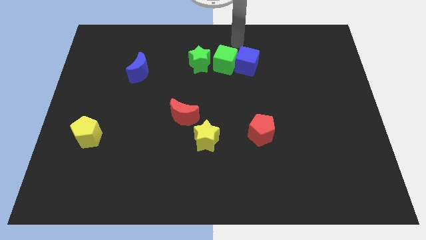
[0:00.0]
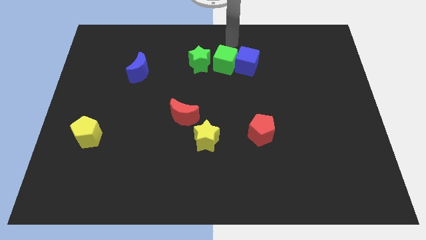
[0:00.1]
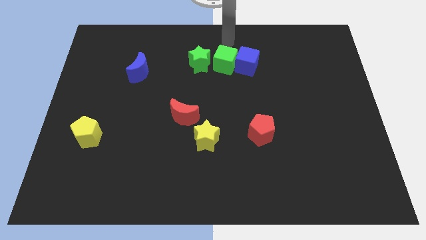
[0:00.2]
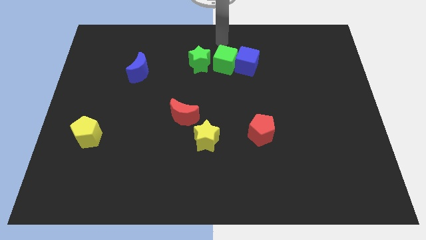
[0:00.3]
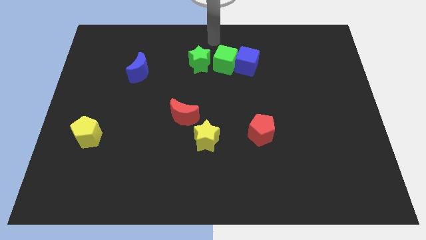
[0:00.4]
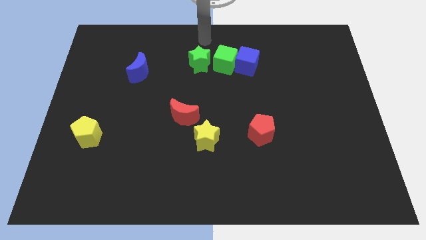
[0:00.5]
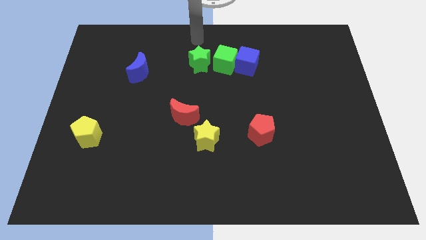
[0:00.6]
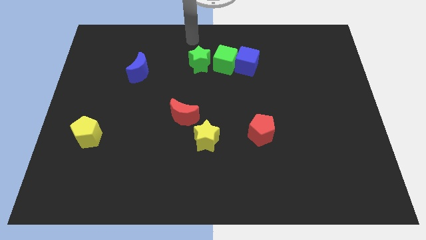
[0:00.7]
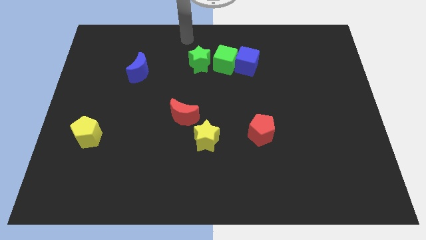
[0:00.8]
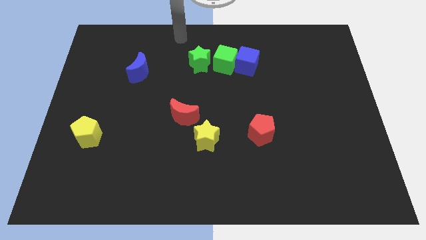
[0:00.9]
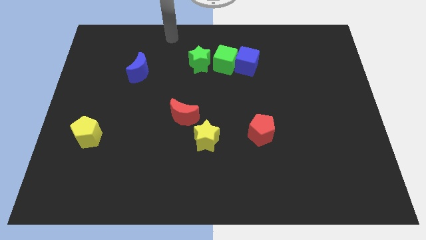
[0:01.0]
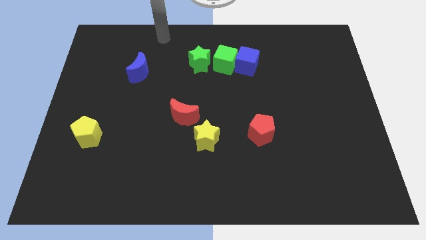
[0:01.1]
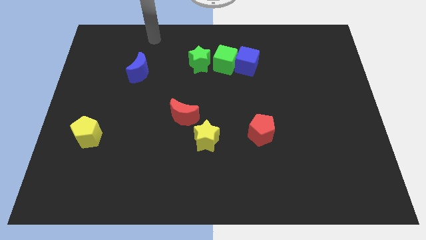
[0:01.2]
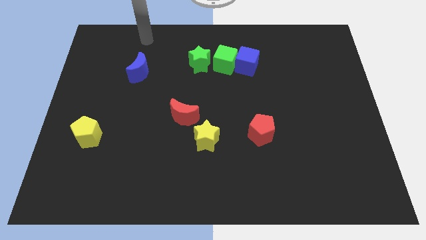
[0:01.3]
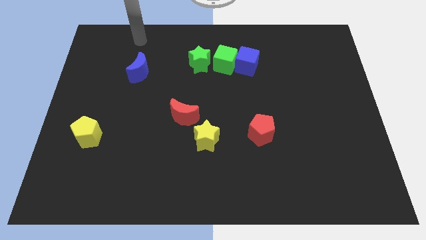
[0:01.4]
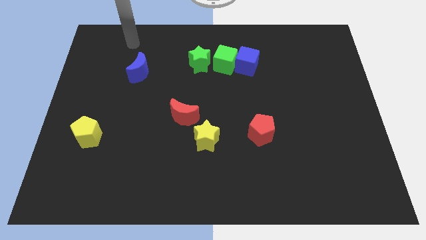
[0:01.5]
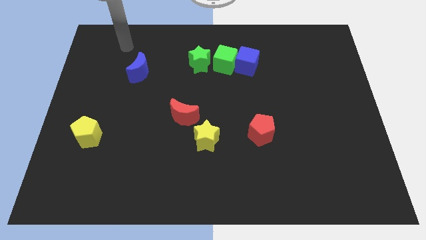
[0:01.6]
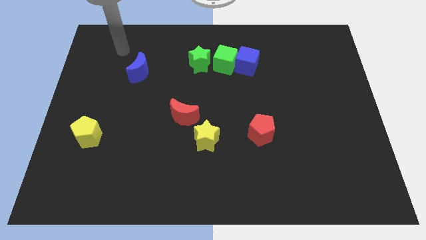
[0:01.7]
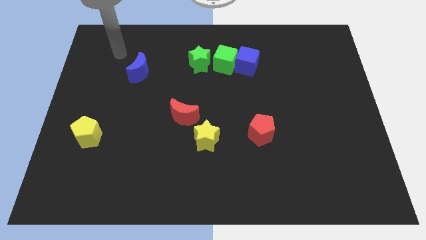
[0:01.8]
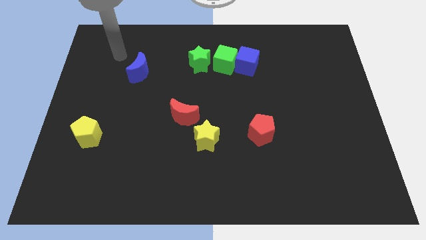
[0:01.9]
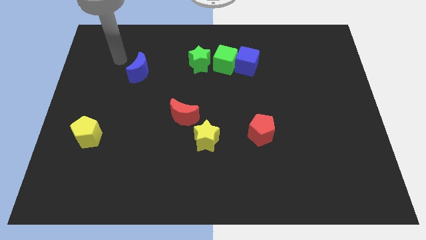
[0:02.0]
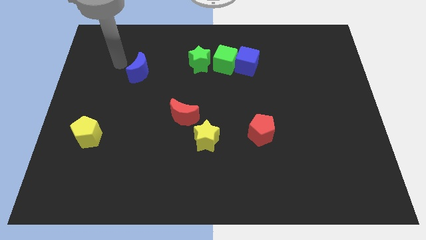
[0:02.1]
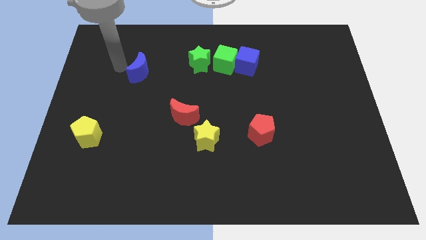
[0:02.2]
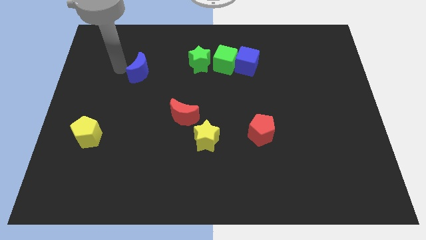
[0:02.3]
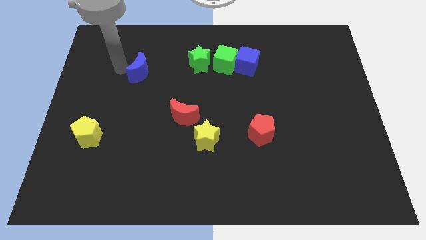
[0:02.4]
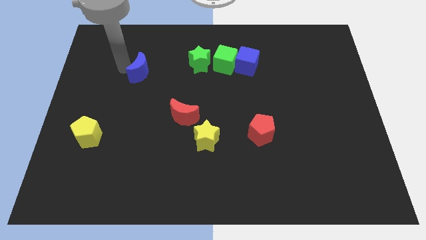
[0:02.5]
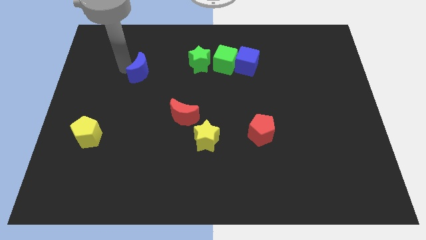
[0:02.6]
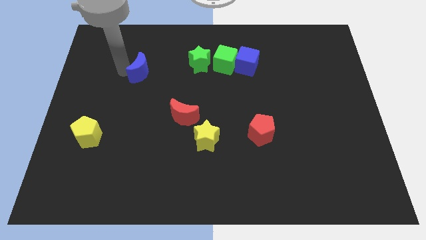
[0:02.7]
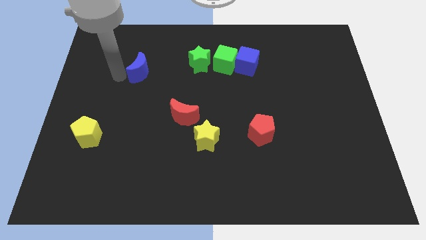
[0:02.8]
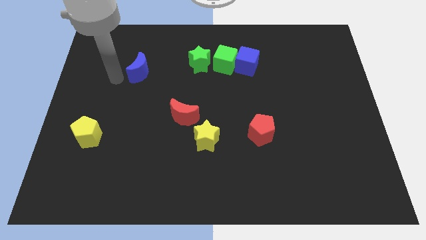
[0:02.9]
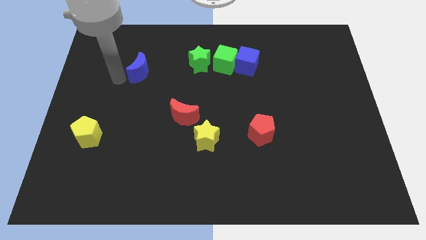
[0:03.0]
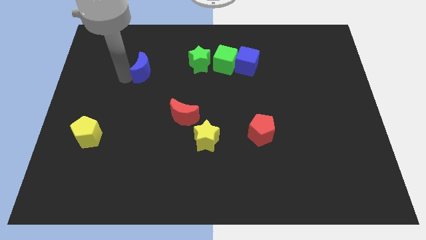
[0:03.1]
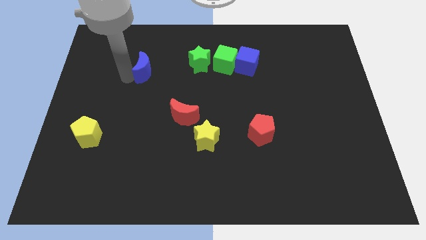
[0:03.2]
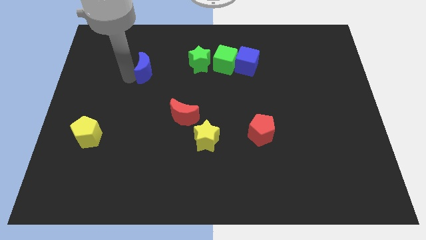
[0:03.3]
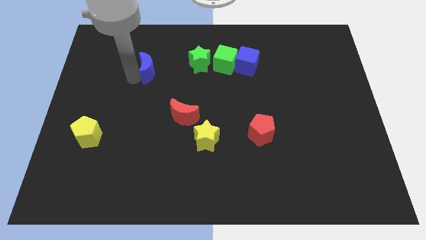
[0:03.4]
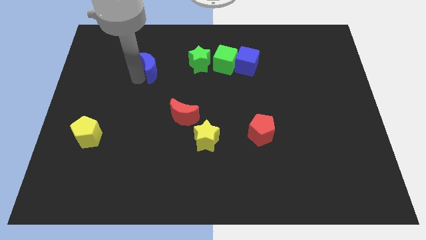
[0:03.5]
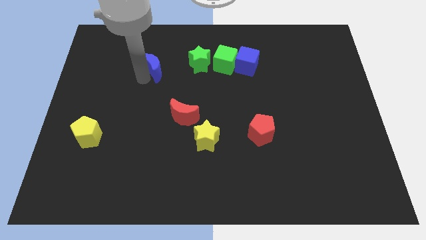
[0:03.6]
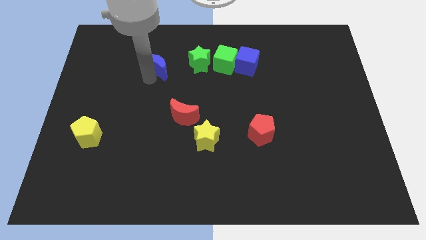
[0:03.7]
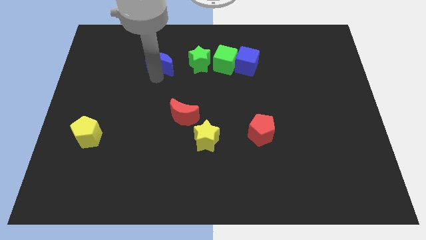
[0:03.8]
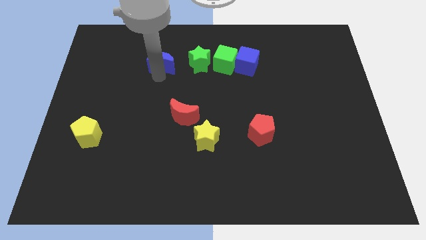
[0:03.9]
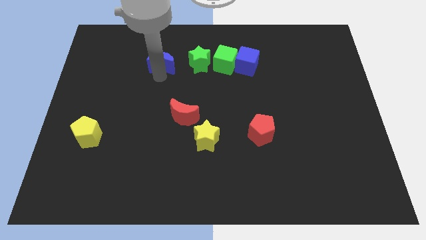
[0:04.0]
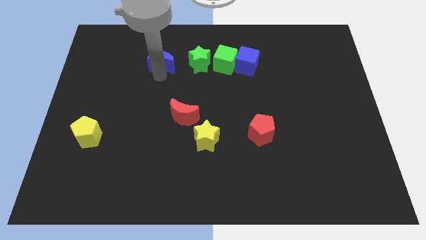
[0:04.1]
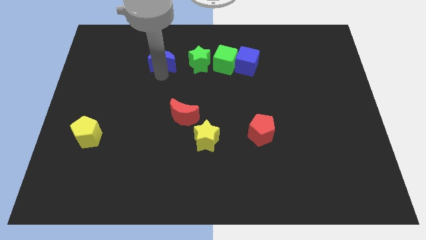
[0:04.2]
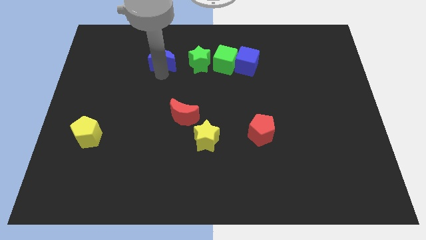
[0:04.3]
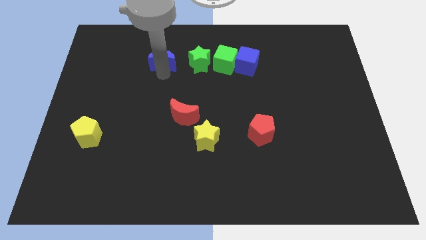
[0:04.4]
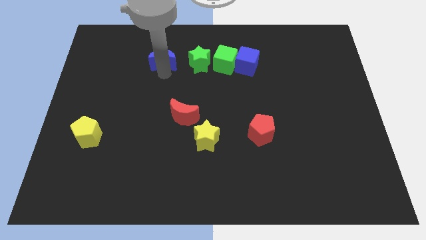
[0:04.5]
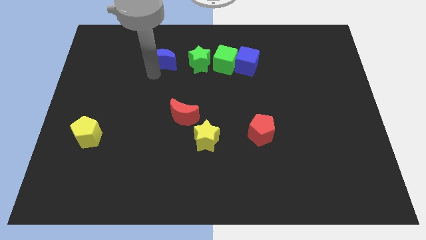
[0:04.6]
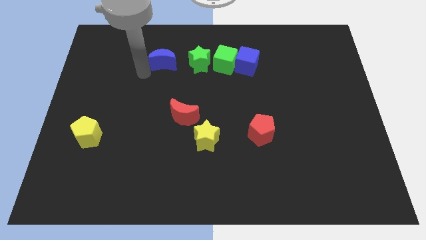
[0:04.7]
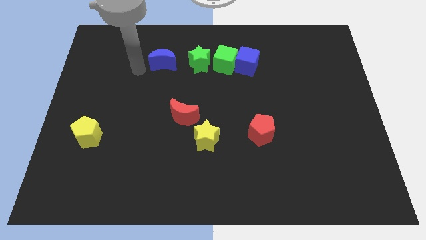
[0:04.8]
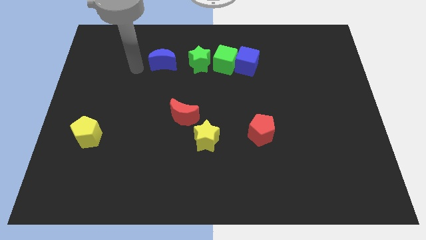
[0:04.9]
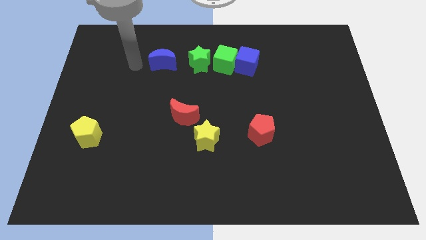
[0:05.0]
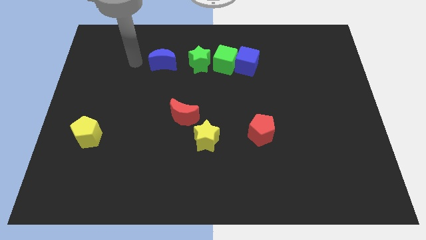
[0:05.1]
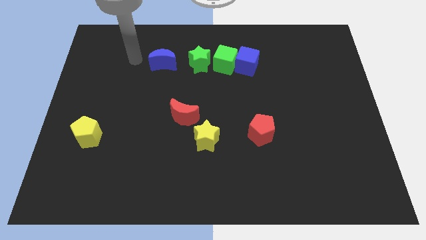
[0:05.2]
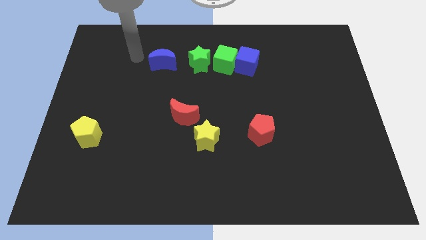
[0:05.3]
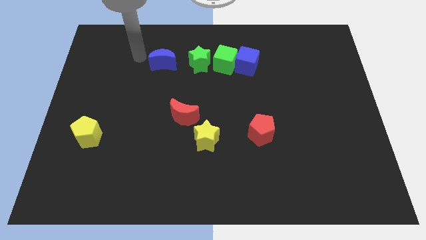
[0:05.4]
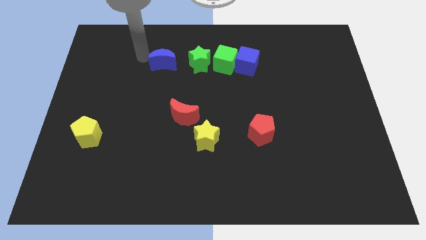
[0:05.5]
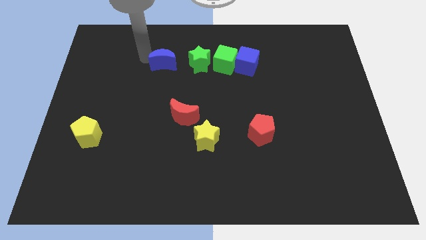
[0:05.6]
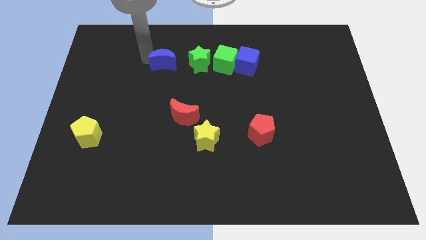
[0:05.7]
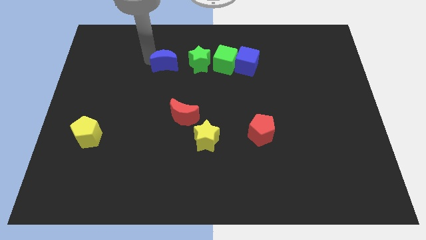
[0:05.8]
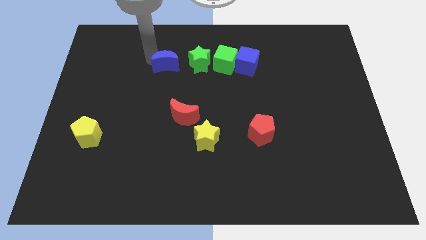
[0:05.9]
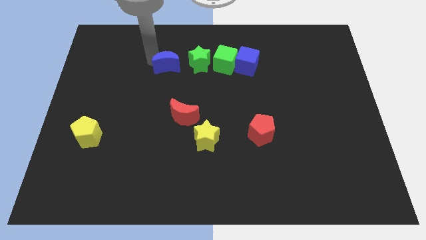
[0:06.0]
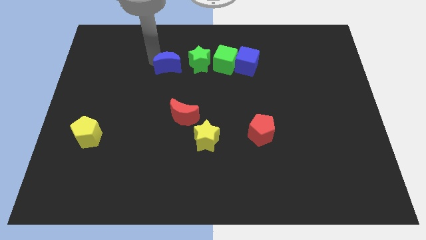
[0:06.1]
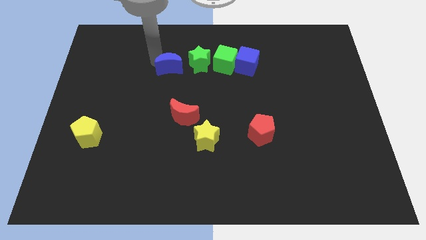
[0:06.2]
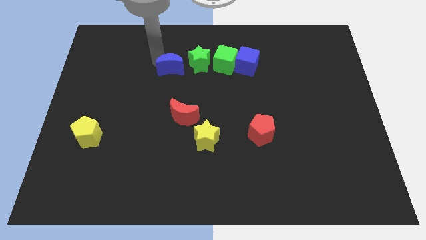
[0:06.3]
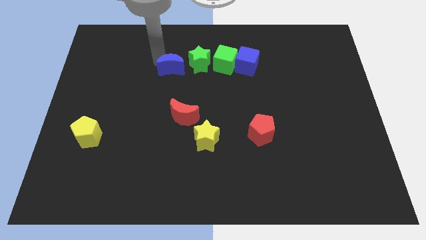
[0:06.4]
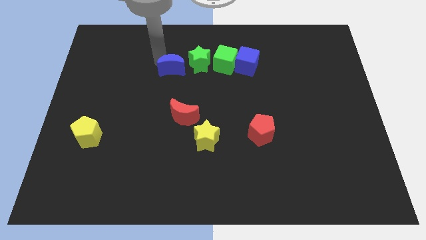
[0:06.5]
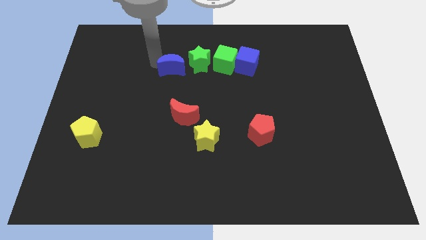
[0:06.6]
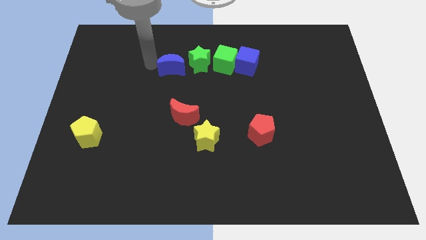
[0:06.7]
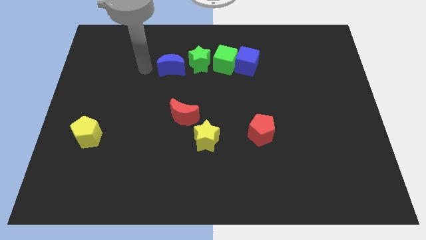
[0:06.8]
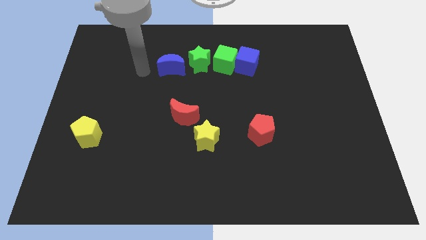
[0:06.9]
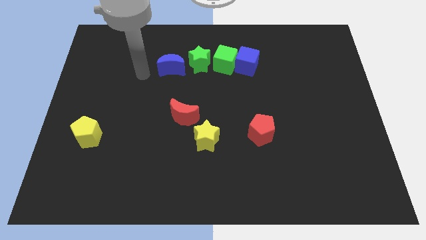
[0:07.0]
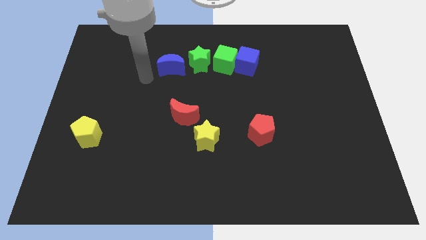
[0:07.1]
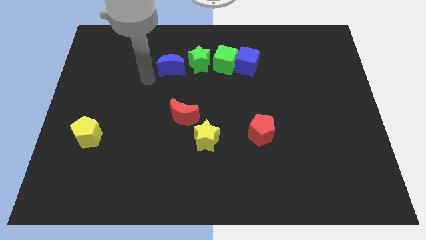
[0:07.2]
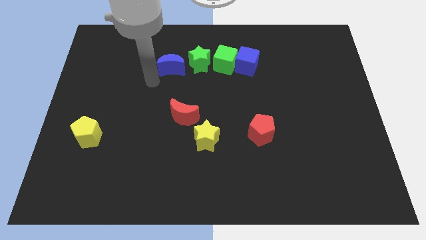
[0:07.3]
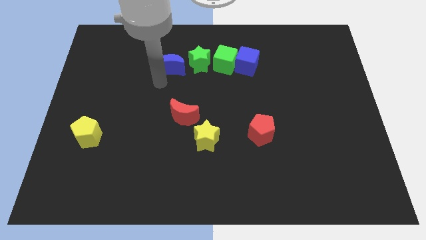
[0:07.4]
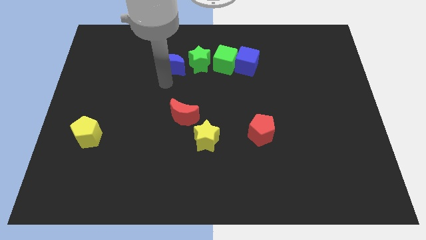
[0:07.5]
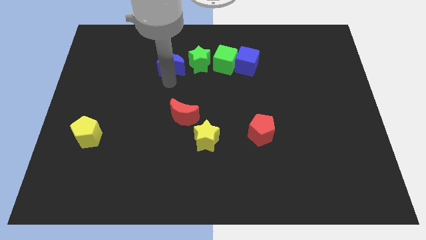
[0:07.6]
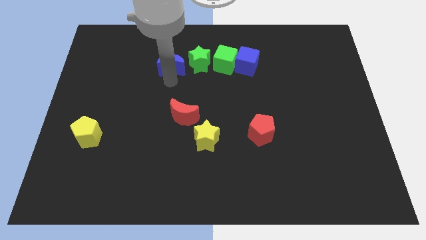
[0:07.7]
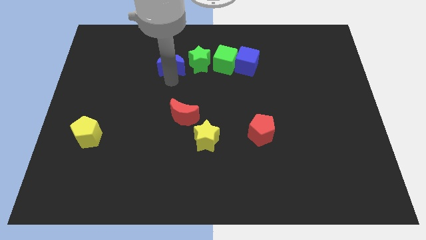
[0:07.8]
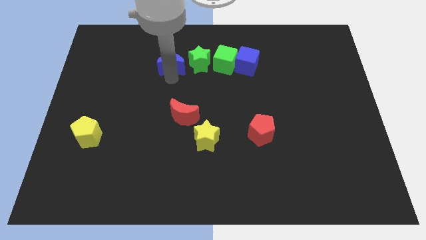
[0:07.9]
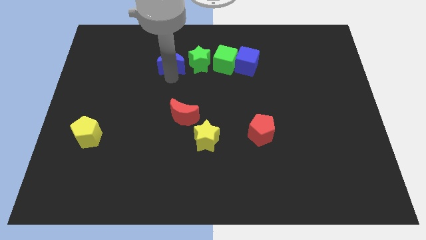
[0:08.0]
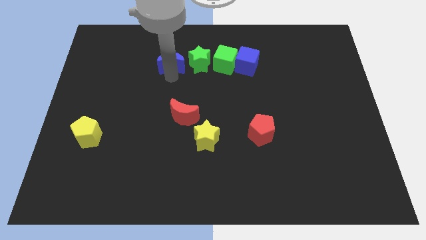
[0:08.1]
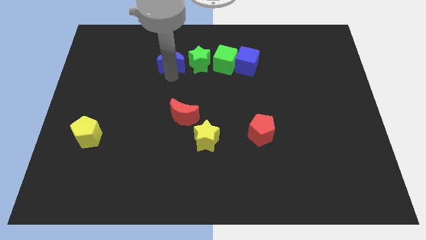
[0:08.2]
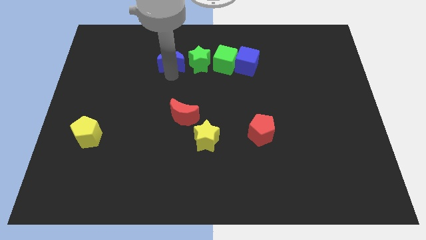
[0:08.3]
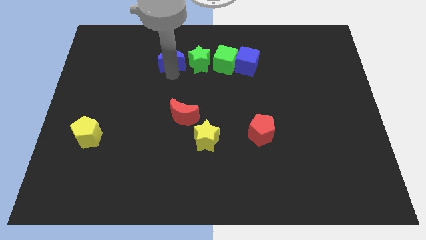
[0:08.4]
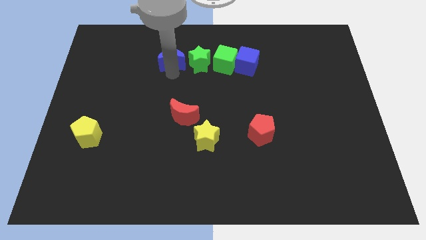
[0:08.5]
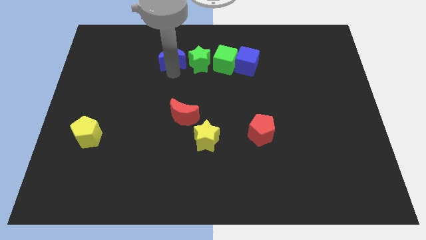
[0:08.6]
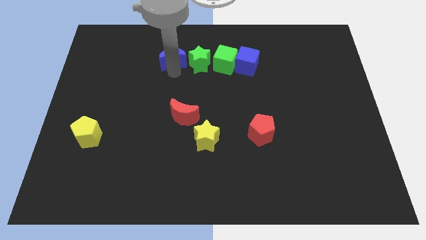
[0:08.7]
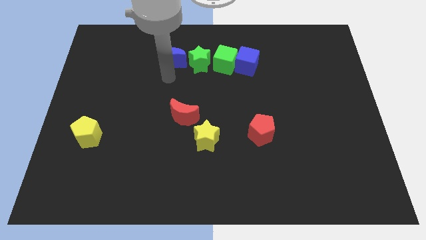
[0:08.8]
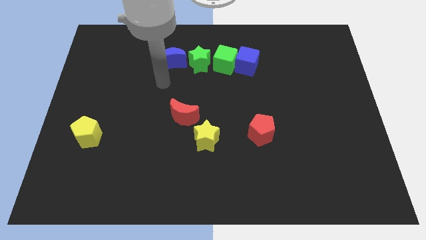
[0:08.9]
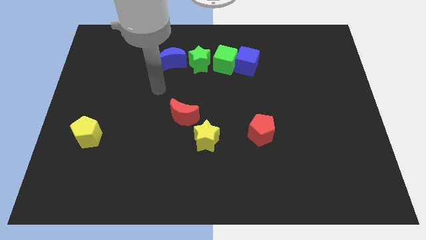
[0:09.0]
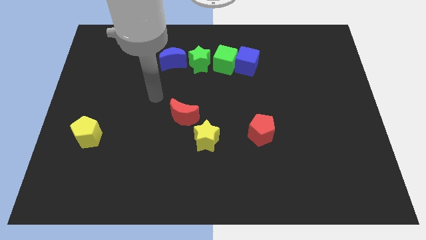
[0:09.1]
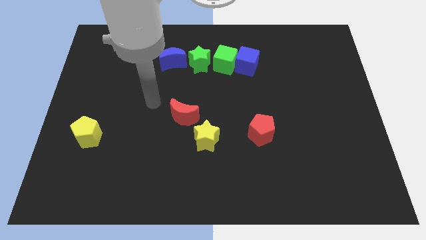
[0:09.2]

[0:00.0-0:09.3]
place the blue crescent to the left of the green star
